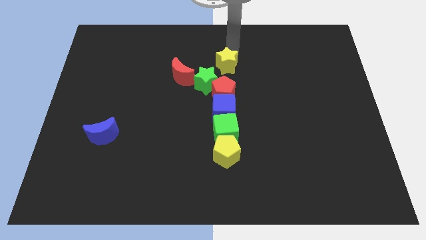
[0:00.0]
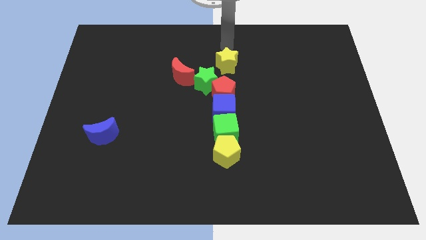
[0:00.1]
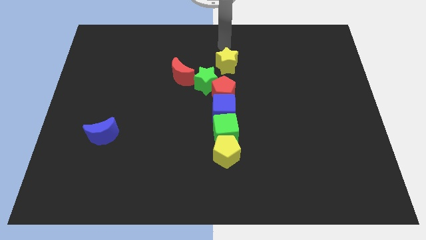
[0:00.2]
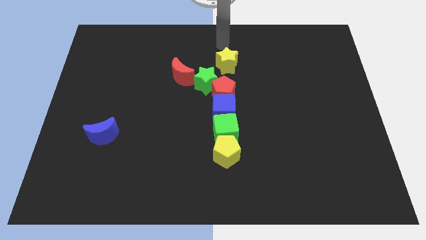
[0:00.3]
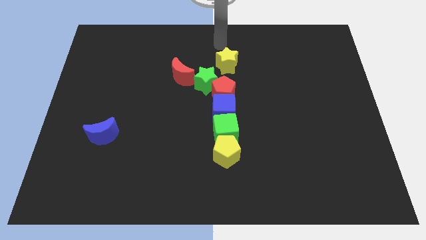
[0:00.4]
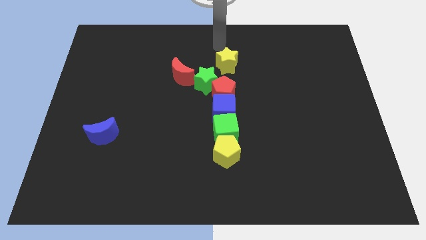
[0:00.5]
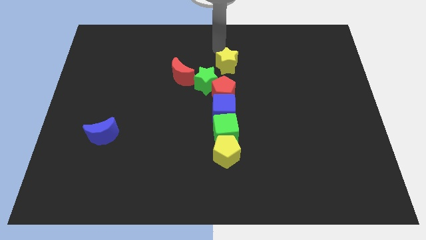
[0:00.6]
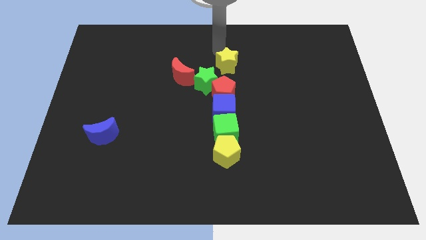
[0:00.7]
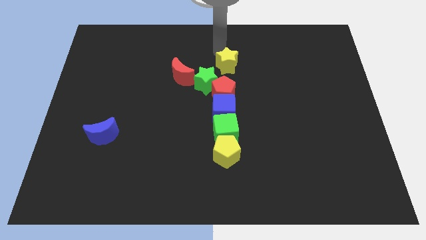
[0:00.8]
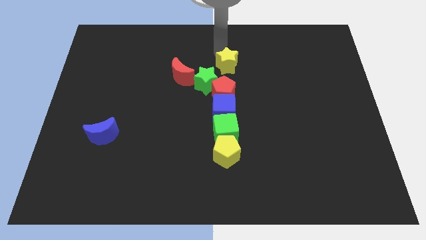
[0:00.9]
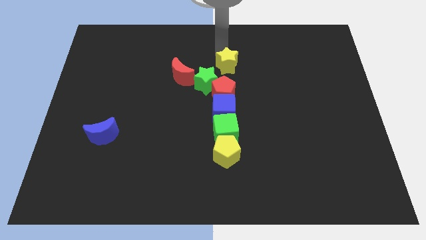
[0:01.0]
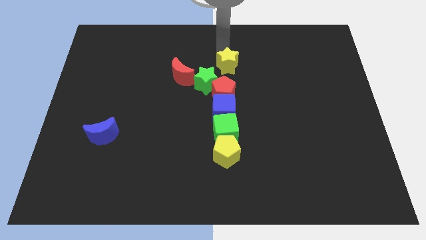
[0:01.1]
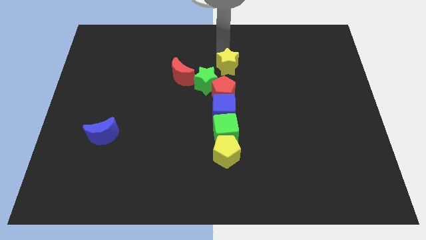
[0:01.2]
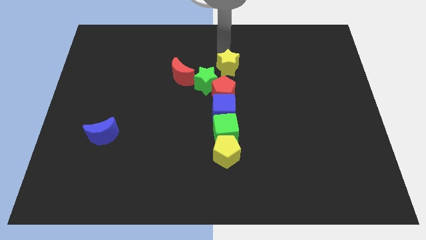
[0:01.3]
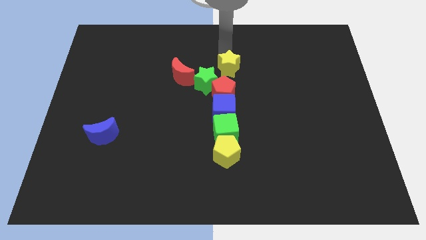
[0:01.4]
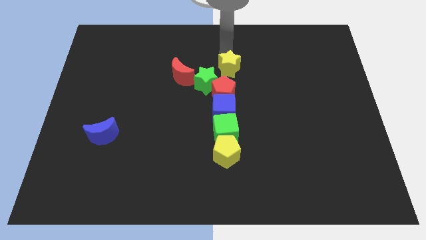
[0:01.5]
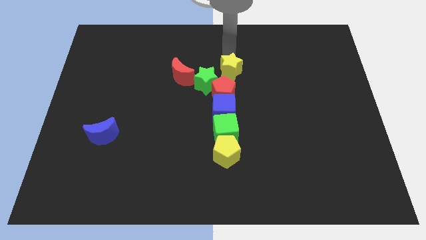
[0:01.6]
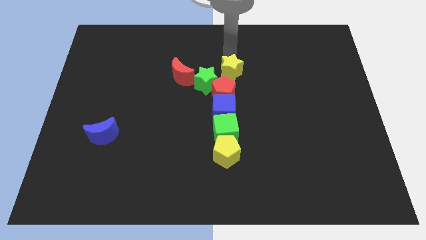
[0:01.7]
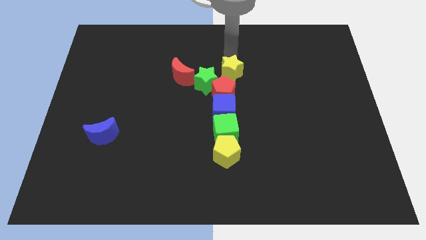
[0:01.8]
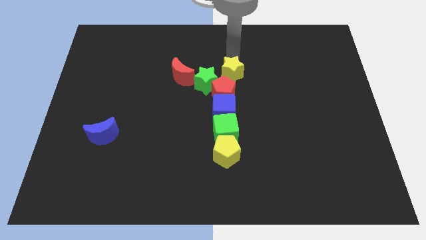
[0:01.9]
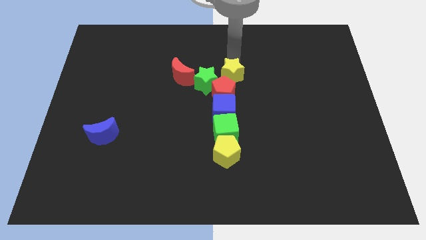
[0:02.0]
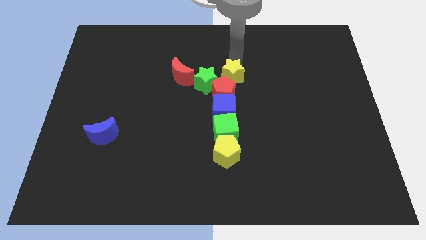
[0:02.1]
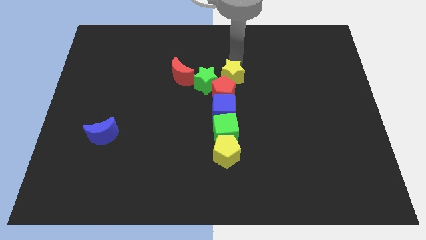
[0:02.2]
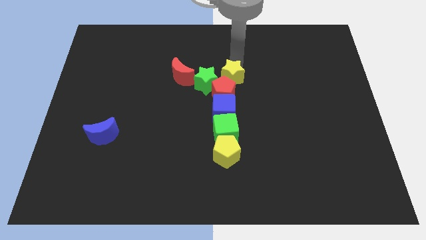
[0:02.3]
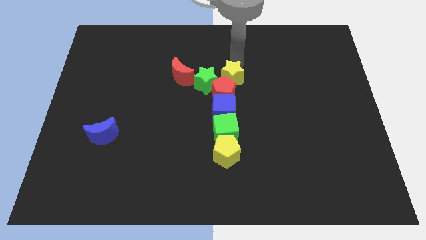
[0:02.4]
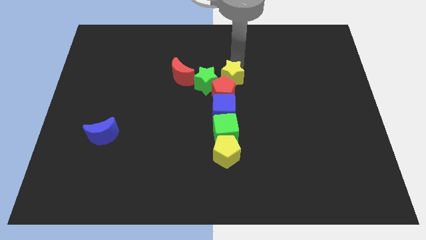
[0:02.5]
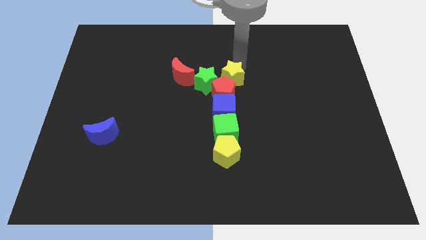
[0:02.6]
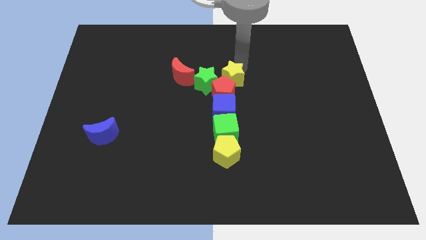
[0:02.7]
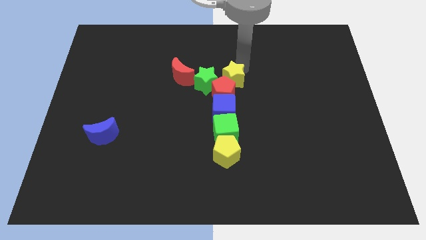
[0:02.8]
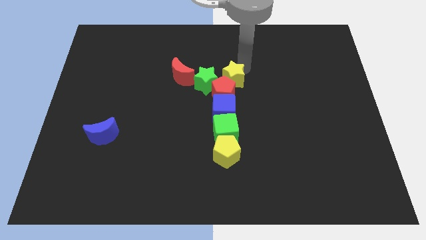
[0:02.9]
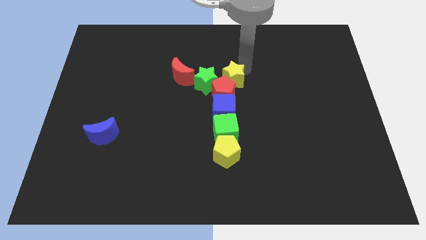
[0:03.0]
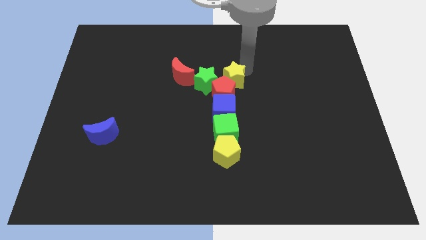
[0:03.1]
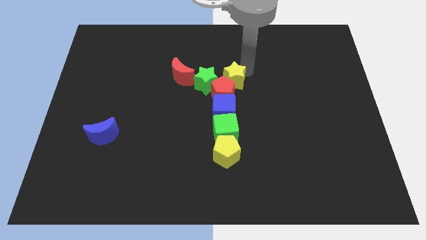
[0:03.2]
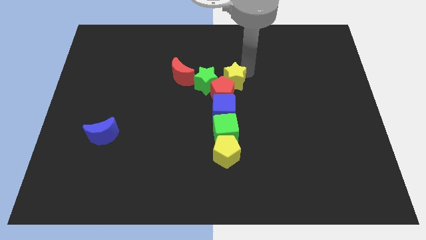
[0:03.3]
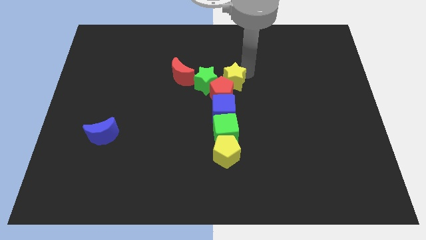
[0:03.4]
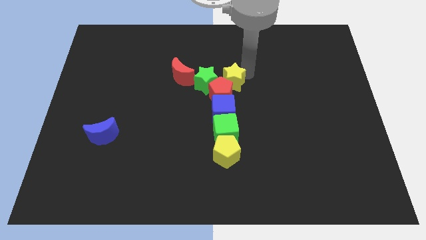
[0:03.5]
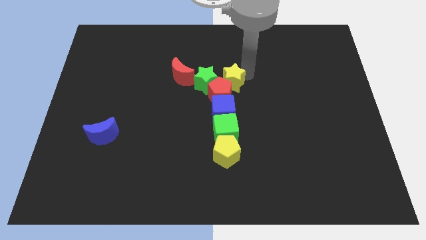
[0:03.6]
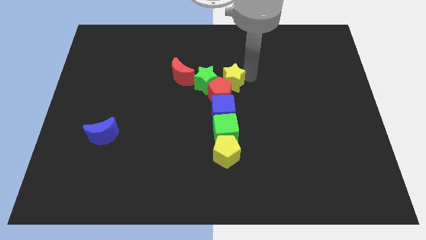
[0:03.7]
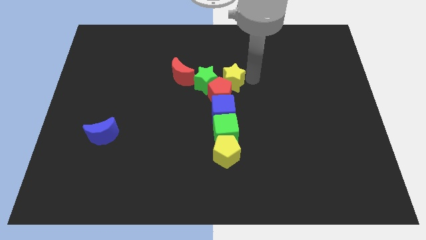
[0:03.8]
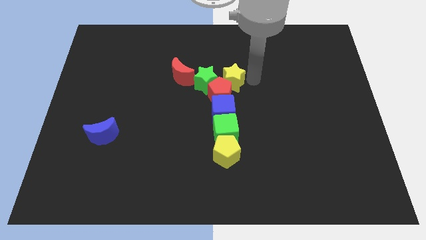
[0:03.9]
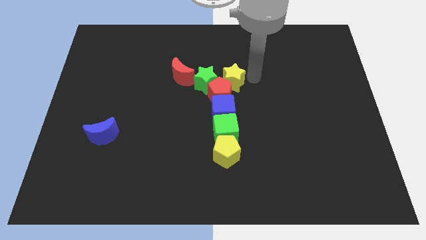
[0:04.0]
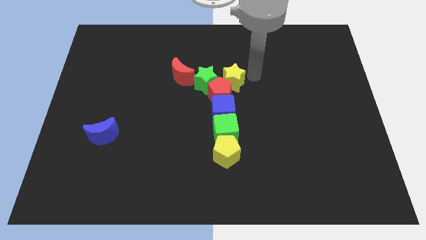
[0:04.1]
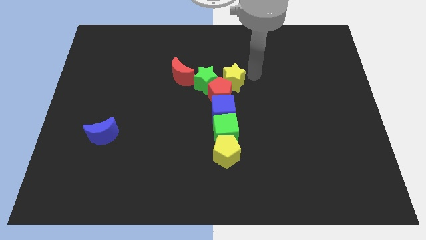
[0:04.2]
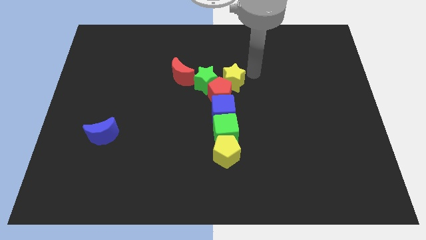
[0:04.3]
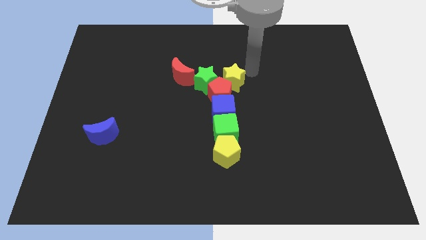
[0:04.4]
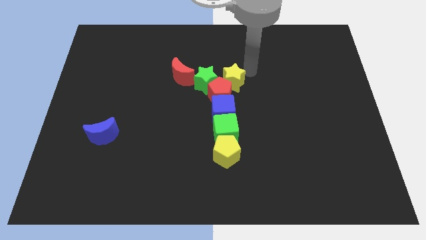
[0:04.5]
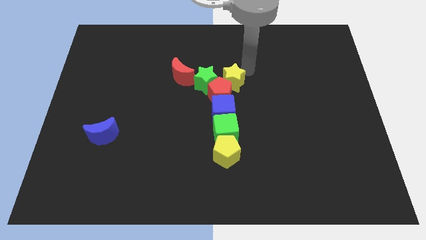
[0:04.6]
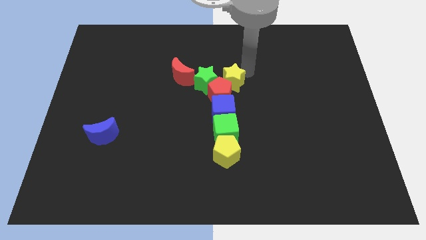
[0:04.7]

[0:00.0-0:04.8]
push the yellow star into the red pentagon

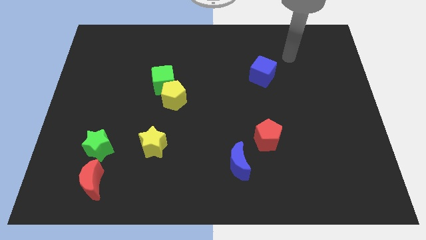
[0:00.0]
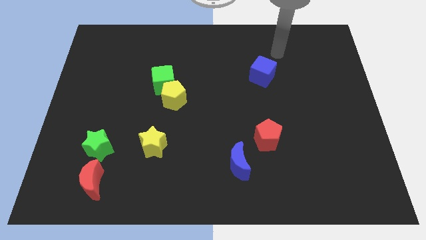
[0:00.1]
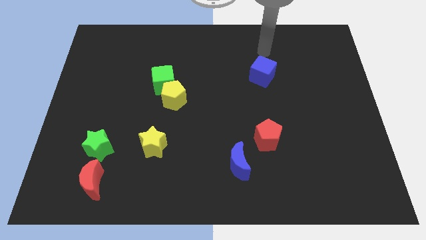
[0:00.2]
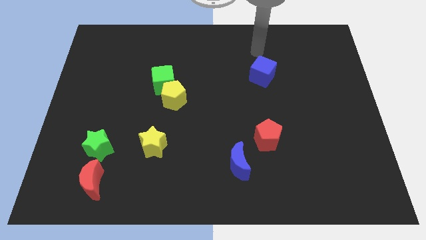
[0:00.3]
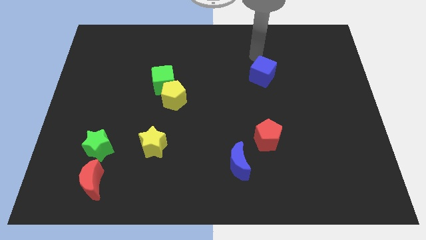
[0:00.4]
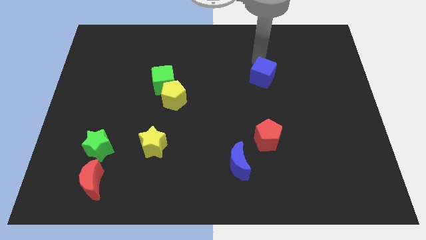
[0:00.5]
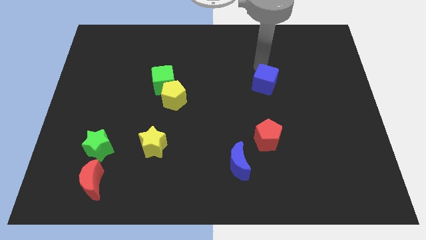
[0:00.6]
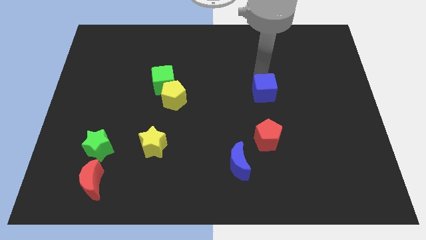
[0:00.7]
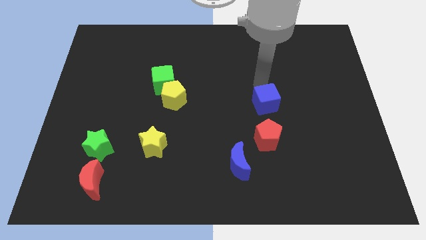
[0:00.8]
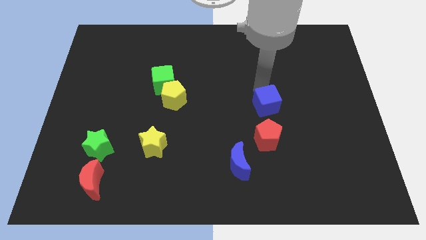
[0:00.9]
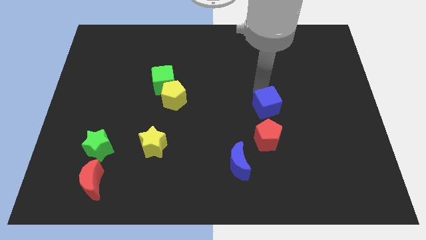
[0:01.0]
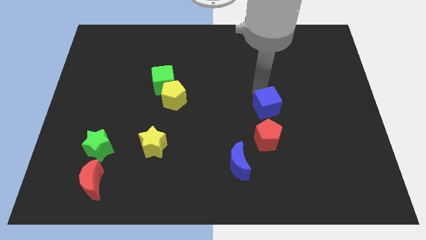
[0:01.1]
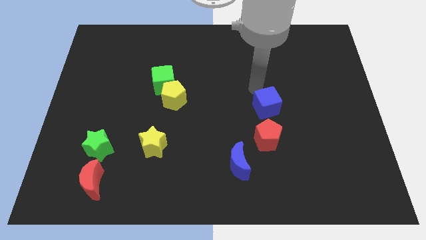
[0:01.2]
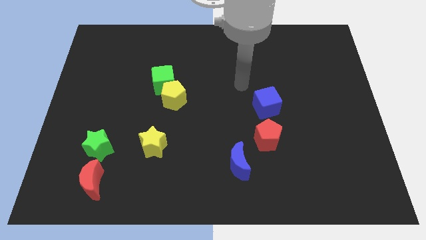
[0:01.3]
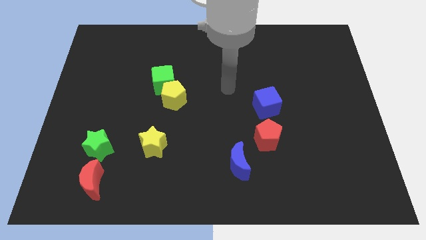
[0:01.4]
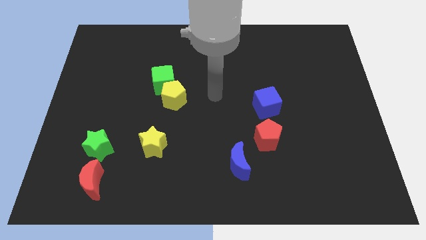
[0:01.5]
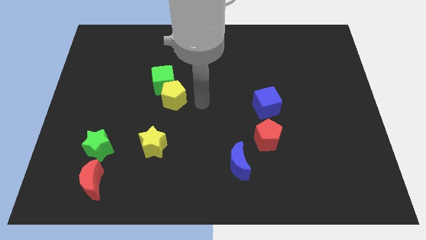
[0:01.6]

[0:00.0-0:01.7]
push the blue cube towards red pentagon

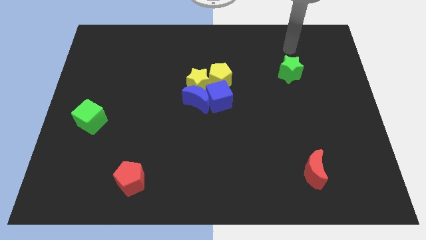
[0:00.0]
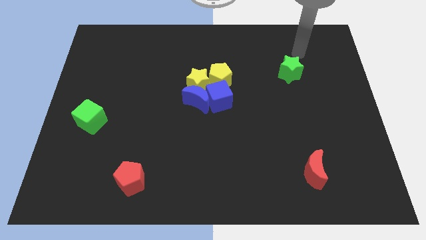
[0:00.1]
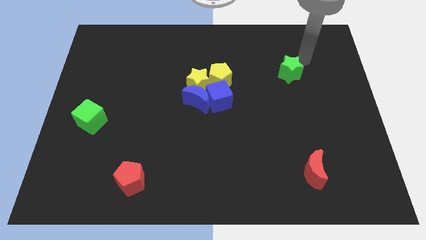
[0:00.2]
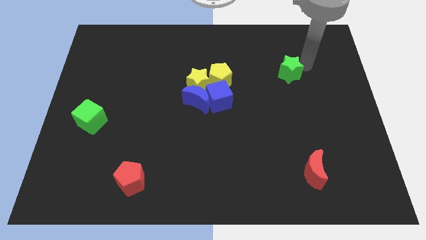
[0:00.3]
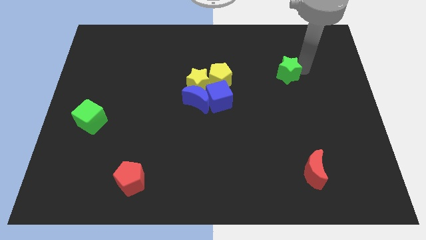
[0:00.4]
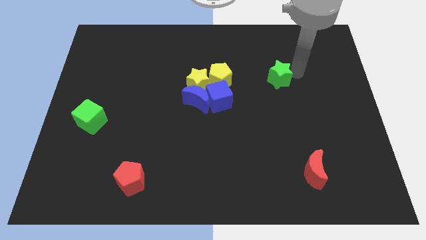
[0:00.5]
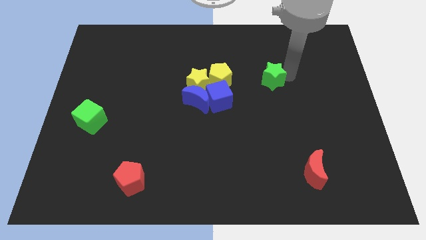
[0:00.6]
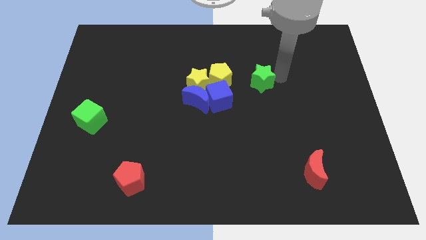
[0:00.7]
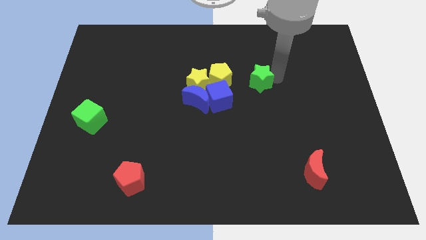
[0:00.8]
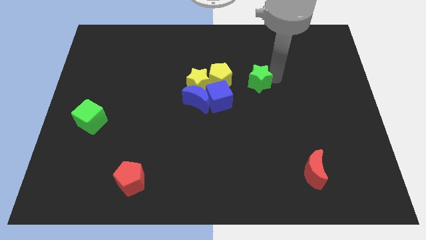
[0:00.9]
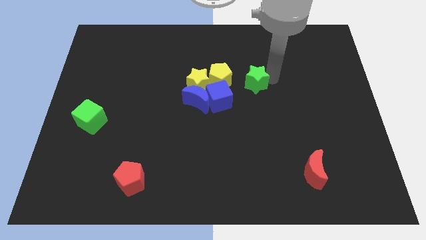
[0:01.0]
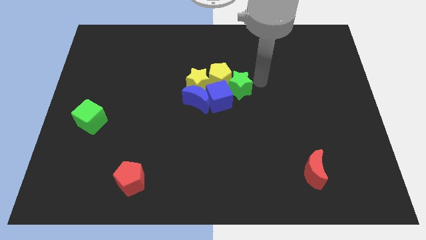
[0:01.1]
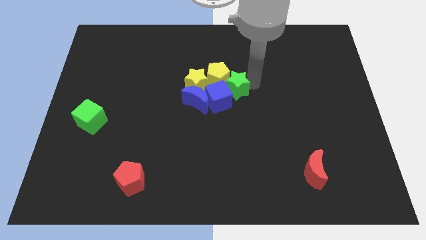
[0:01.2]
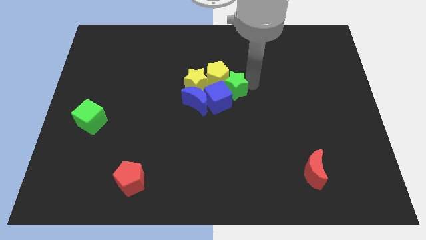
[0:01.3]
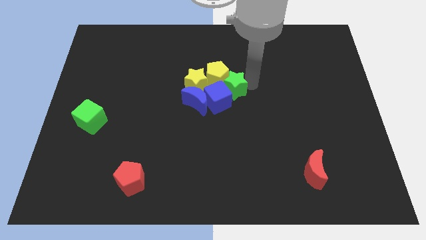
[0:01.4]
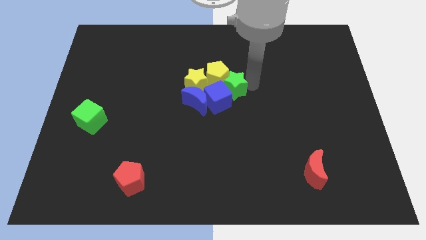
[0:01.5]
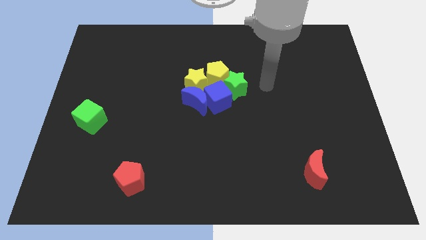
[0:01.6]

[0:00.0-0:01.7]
move the green star into the green star

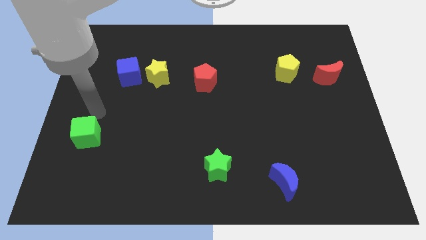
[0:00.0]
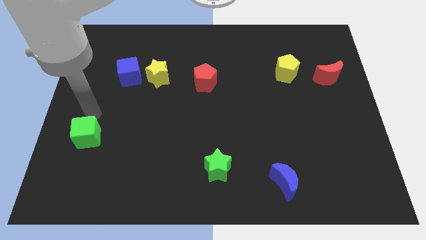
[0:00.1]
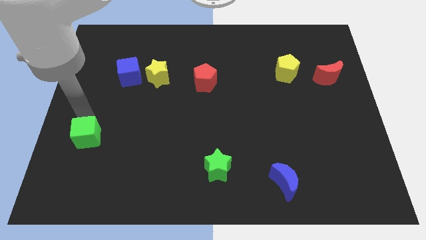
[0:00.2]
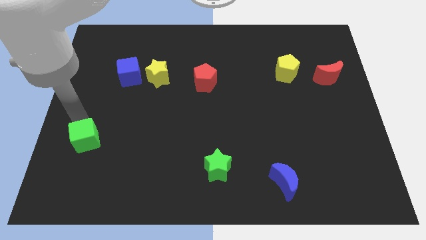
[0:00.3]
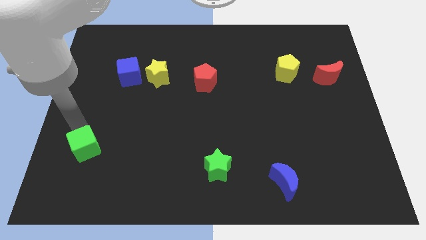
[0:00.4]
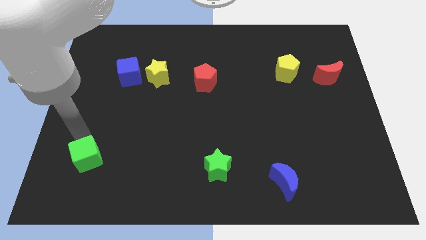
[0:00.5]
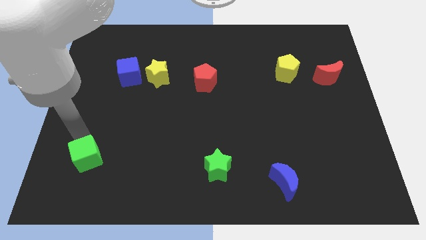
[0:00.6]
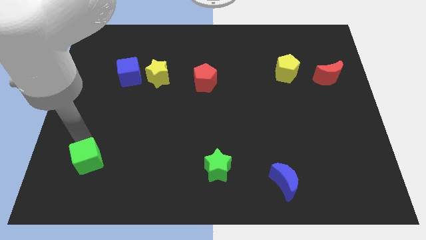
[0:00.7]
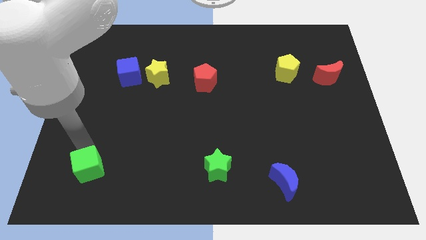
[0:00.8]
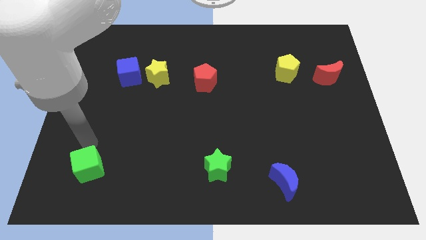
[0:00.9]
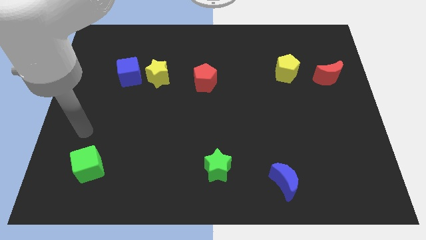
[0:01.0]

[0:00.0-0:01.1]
place the green cube parallel to green star
